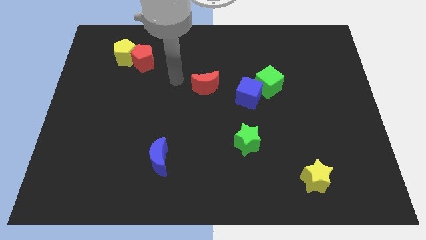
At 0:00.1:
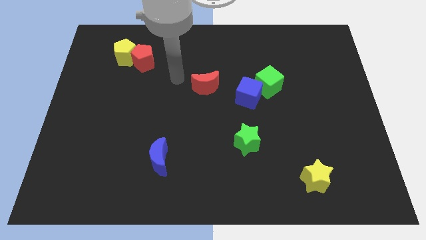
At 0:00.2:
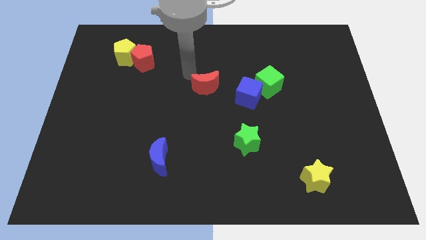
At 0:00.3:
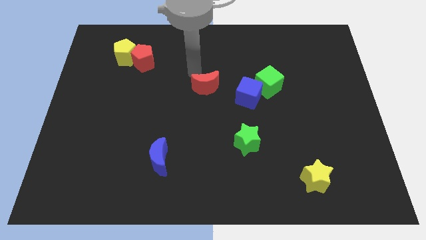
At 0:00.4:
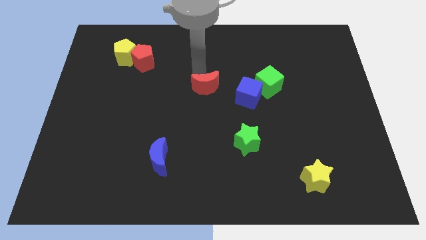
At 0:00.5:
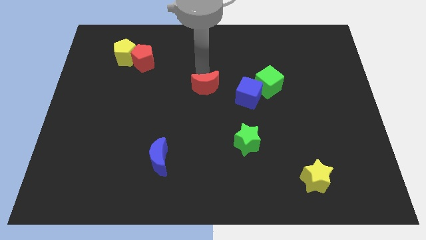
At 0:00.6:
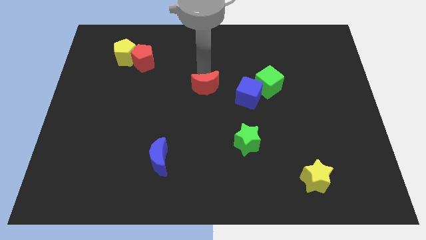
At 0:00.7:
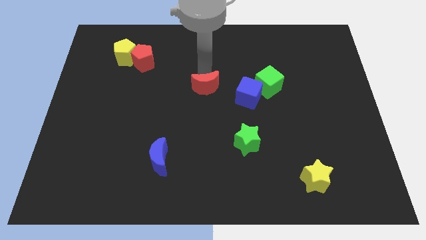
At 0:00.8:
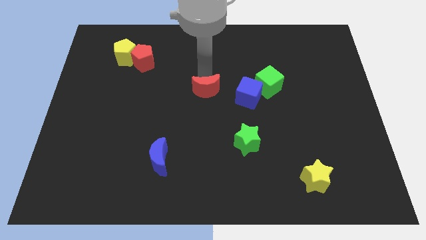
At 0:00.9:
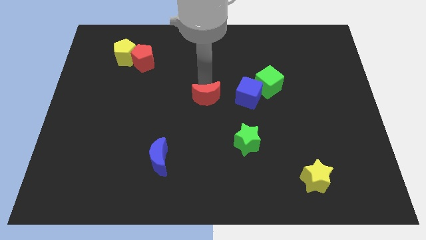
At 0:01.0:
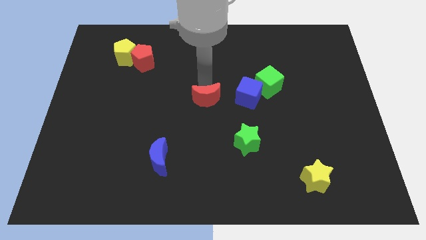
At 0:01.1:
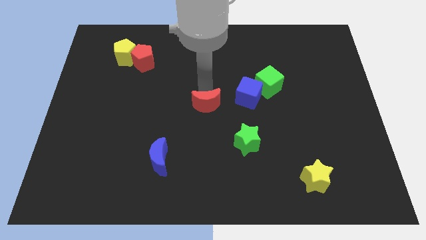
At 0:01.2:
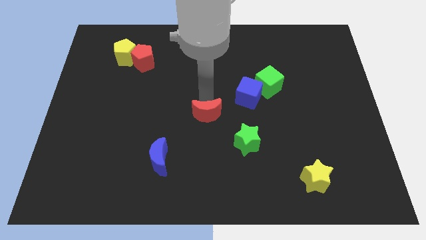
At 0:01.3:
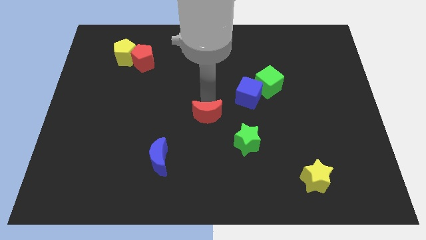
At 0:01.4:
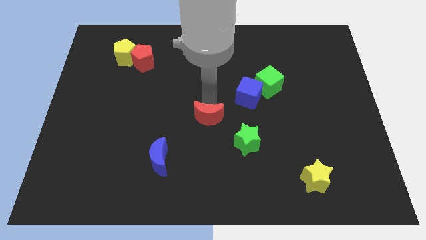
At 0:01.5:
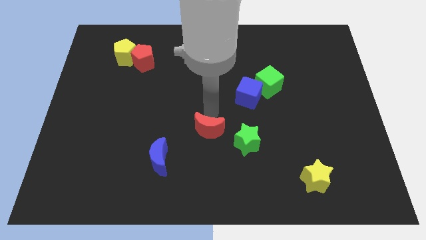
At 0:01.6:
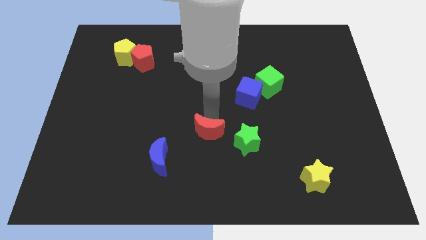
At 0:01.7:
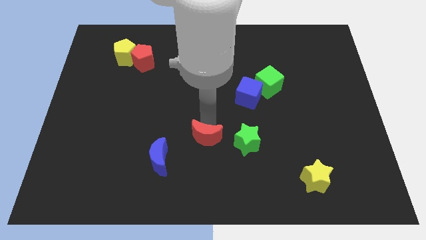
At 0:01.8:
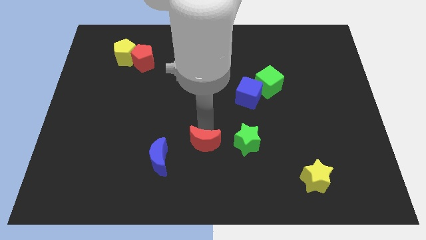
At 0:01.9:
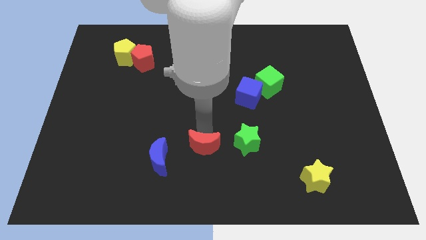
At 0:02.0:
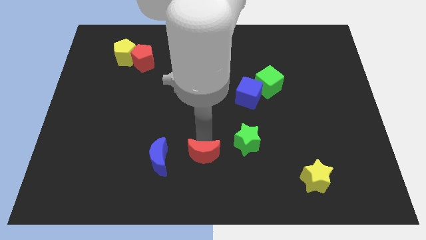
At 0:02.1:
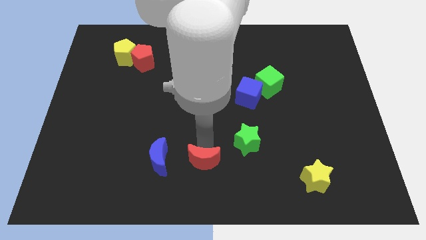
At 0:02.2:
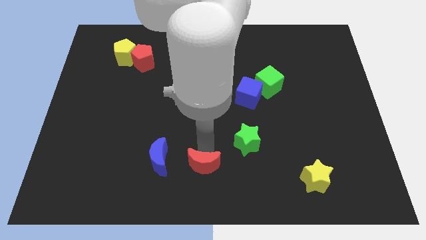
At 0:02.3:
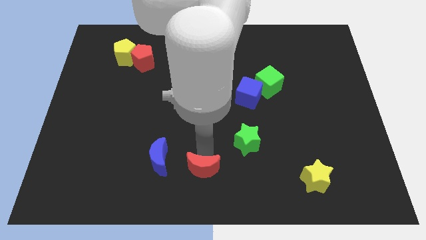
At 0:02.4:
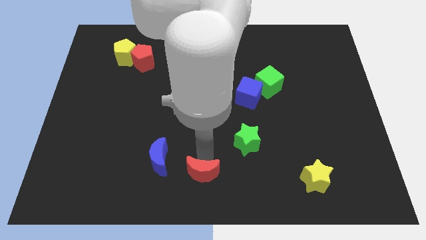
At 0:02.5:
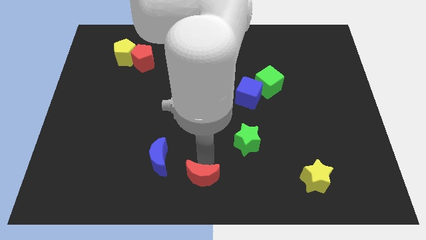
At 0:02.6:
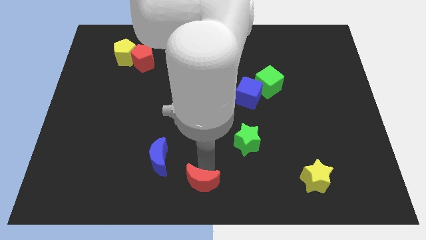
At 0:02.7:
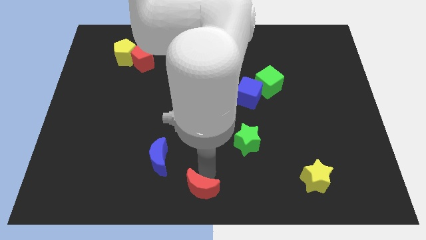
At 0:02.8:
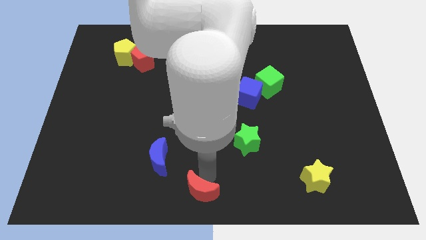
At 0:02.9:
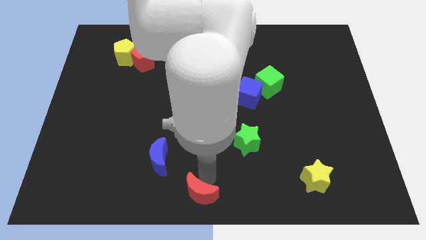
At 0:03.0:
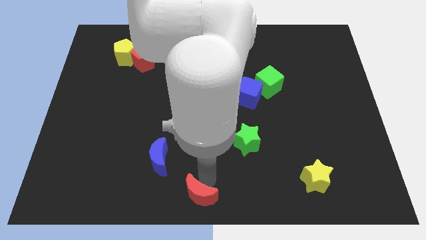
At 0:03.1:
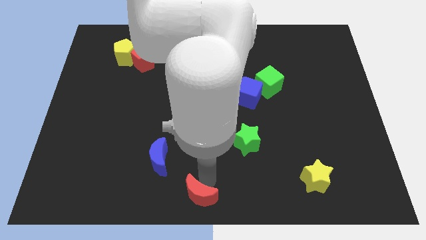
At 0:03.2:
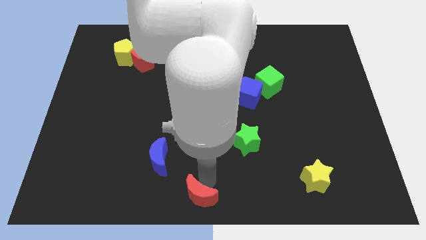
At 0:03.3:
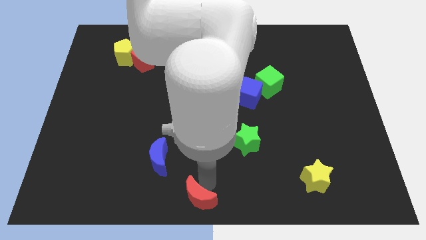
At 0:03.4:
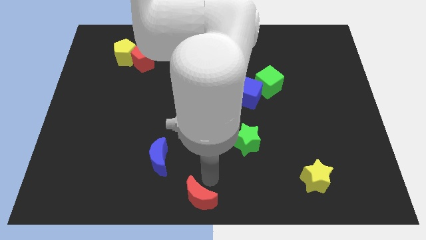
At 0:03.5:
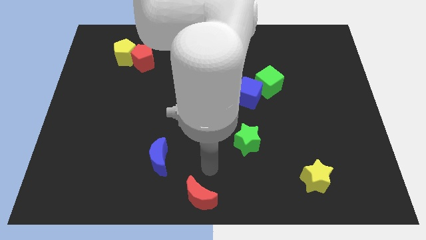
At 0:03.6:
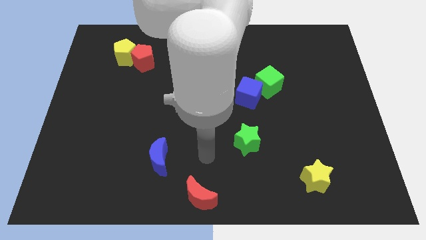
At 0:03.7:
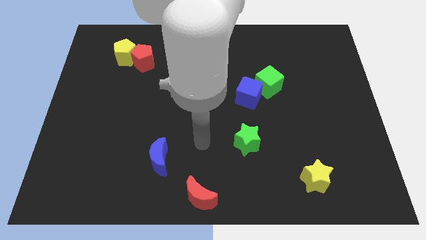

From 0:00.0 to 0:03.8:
slide the red moon at the bottom center of the board

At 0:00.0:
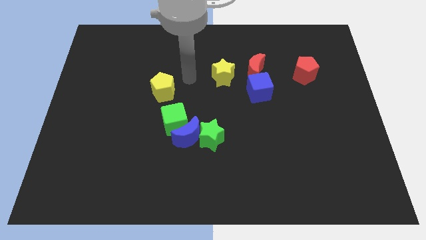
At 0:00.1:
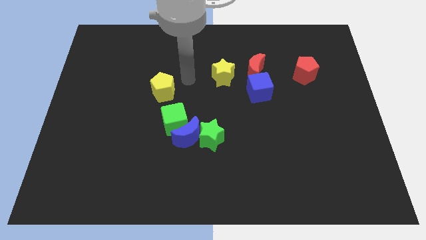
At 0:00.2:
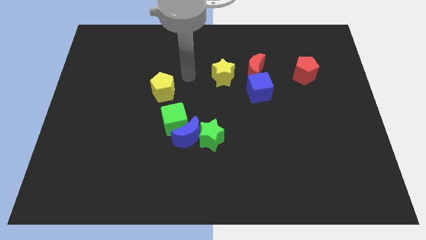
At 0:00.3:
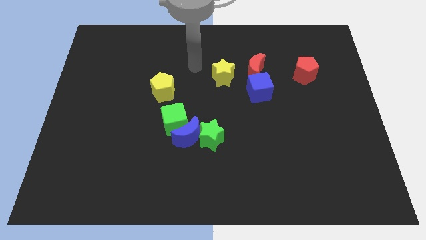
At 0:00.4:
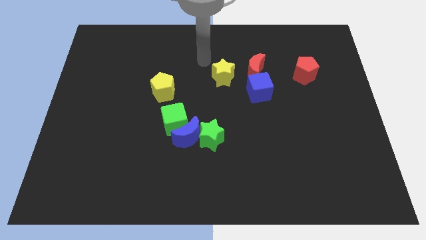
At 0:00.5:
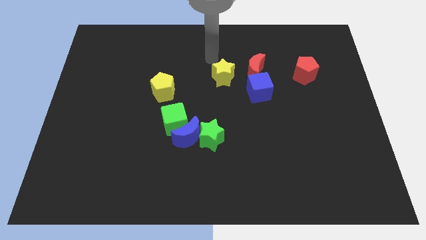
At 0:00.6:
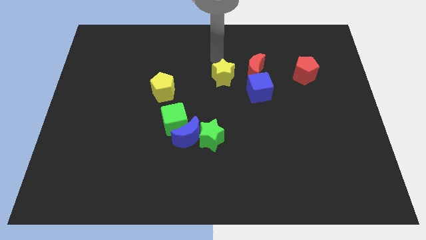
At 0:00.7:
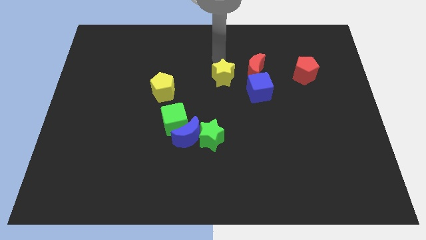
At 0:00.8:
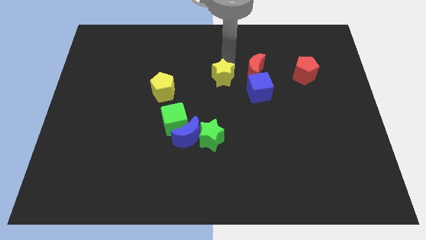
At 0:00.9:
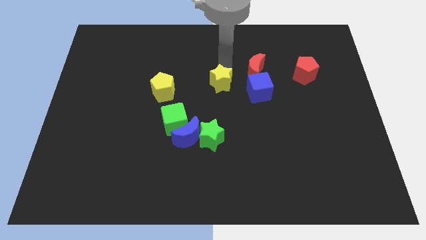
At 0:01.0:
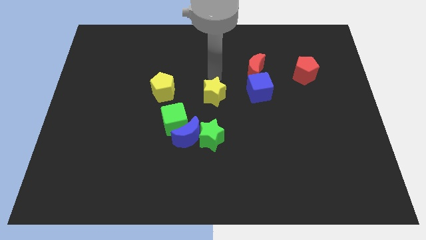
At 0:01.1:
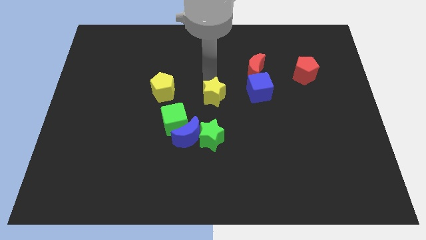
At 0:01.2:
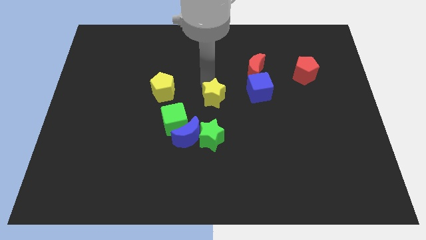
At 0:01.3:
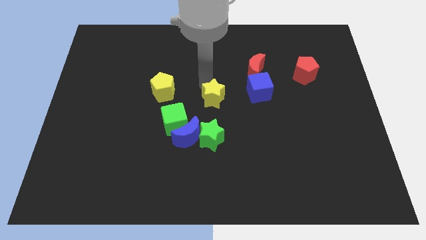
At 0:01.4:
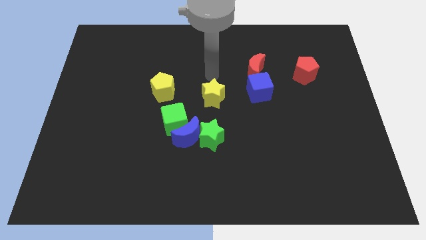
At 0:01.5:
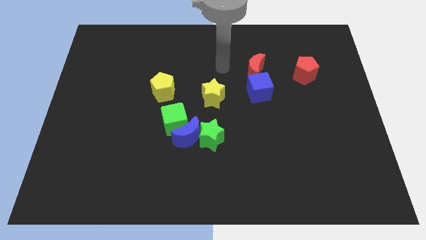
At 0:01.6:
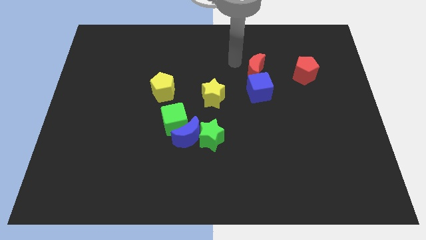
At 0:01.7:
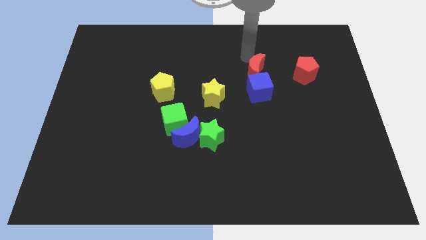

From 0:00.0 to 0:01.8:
push the yellow star above green star

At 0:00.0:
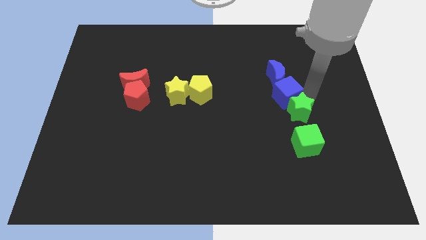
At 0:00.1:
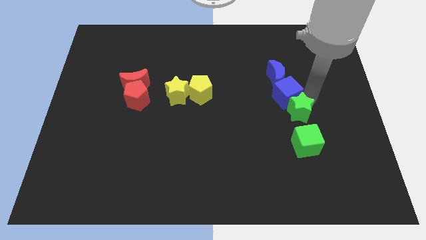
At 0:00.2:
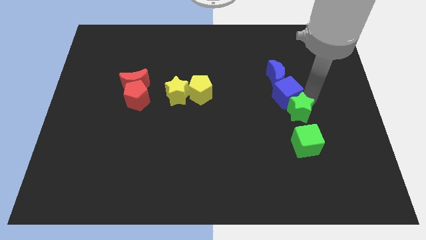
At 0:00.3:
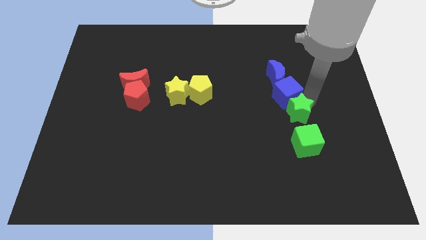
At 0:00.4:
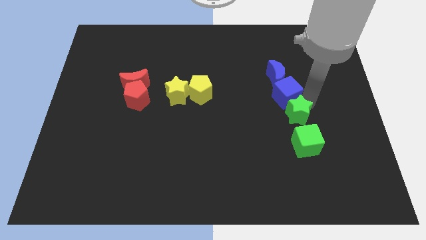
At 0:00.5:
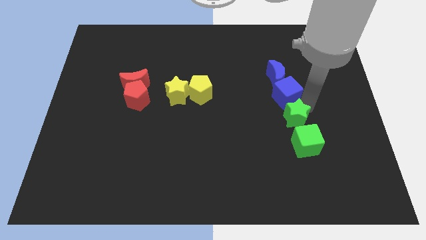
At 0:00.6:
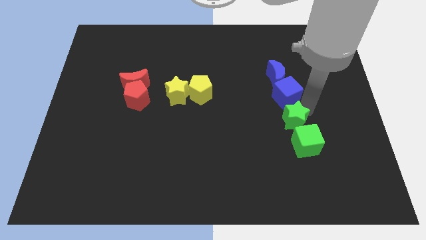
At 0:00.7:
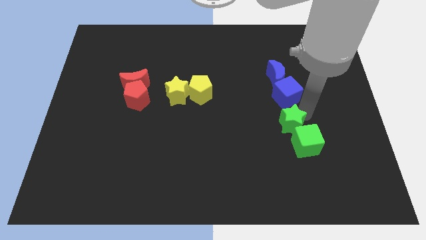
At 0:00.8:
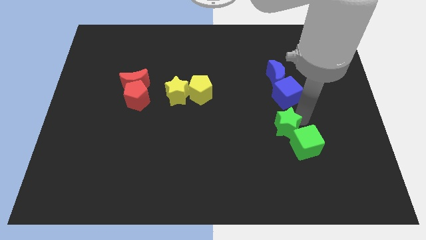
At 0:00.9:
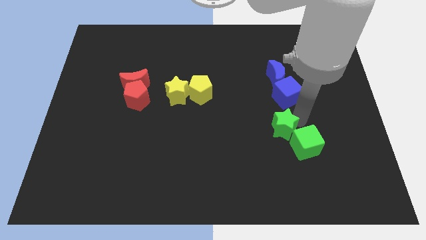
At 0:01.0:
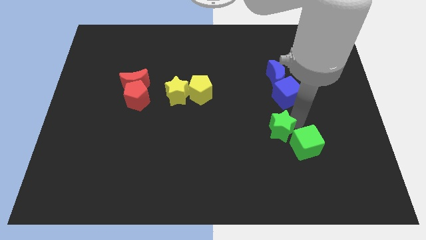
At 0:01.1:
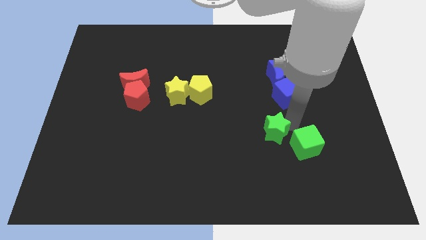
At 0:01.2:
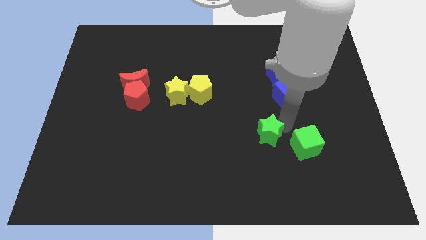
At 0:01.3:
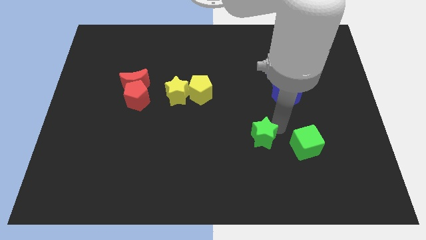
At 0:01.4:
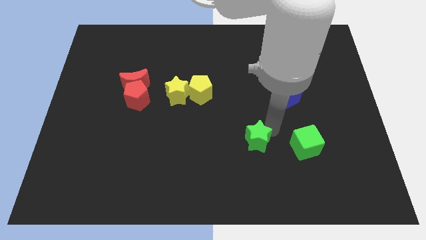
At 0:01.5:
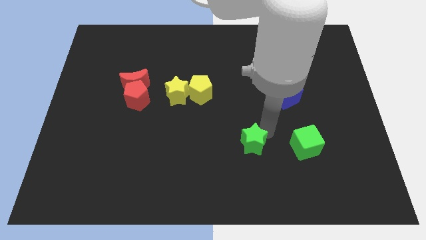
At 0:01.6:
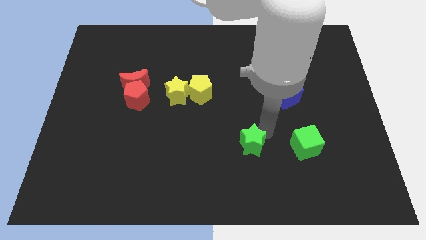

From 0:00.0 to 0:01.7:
move green star to the left of green cube

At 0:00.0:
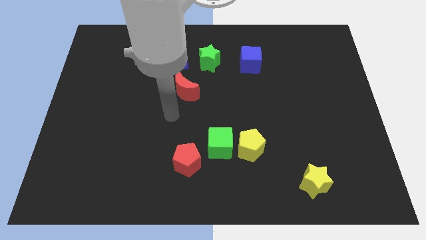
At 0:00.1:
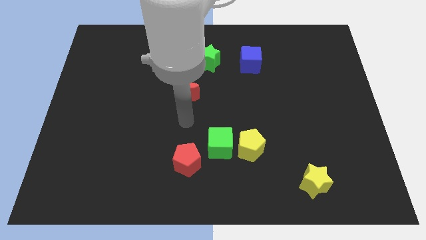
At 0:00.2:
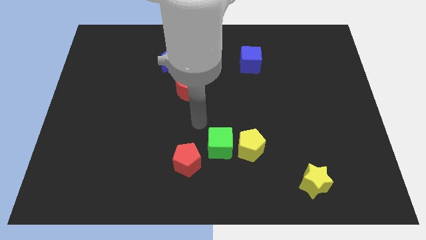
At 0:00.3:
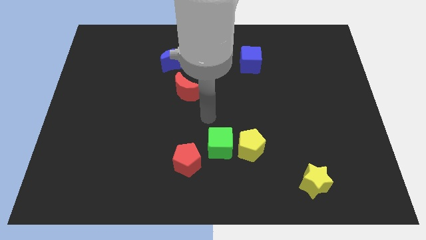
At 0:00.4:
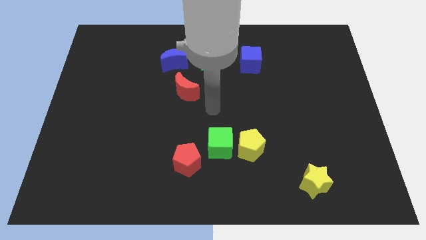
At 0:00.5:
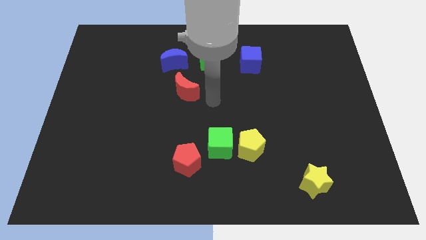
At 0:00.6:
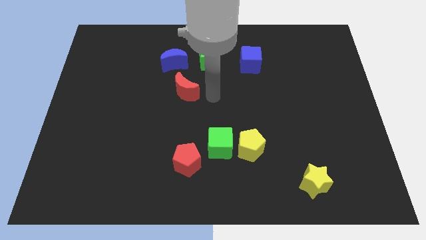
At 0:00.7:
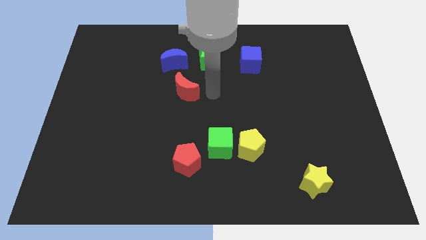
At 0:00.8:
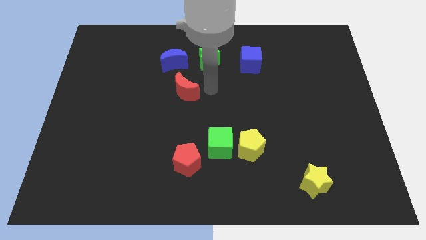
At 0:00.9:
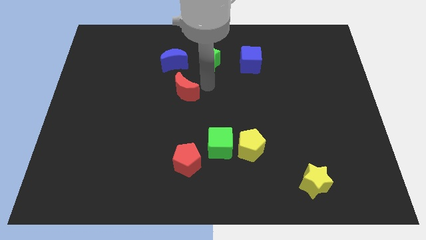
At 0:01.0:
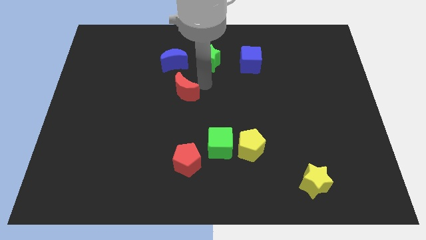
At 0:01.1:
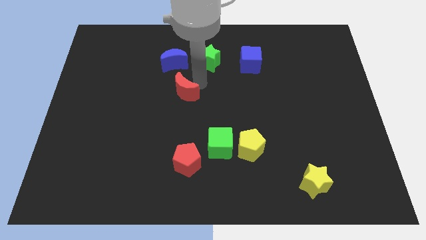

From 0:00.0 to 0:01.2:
slightly touch down the red moon

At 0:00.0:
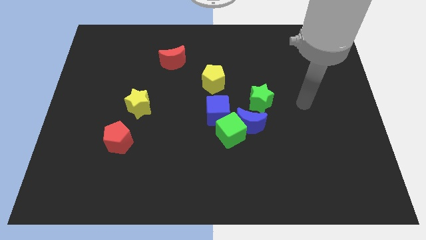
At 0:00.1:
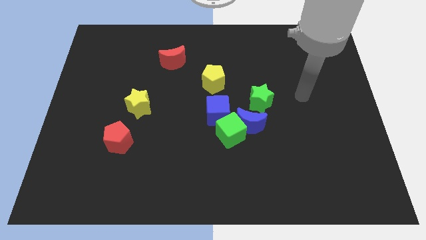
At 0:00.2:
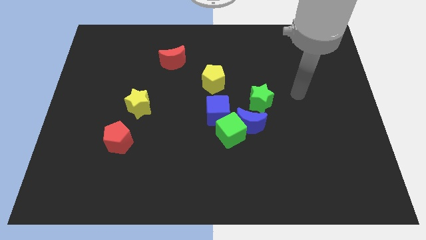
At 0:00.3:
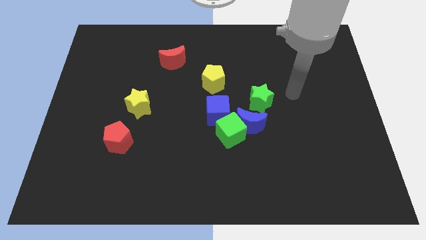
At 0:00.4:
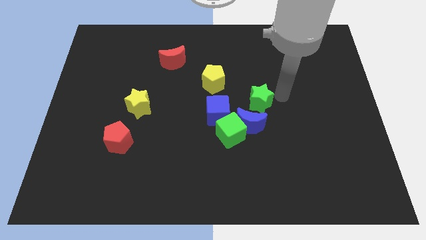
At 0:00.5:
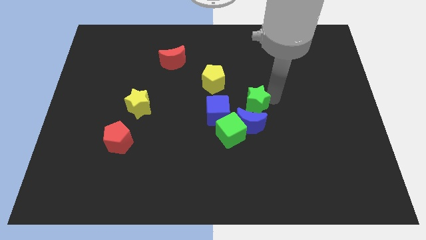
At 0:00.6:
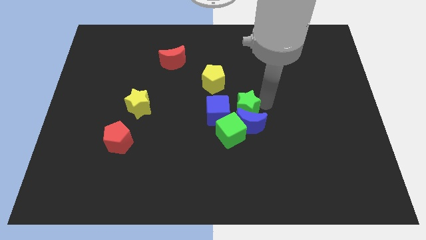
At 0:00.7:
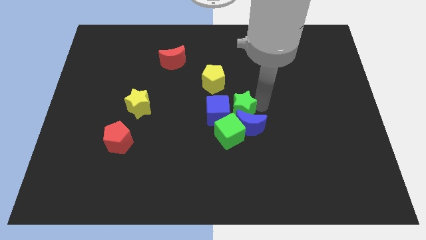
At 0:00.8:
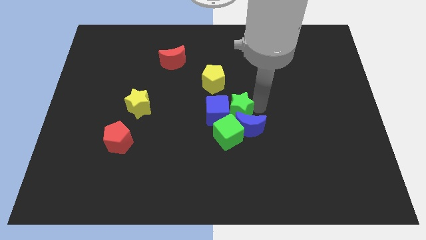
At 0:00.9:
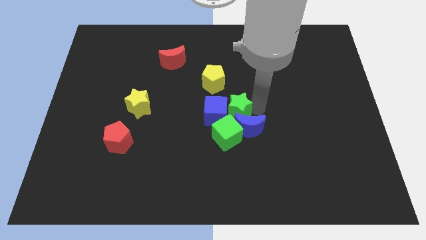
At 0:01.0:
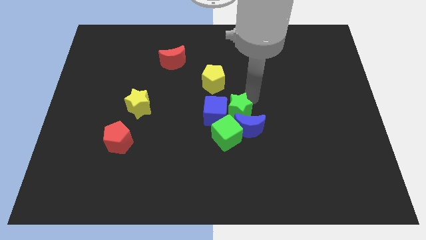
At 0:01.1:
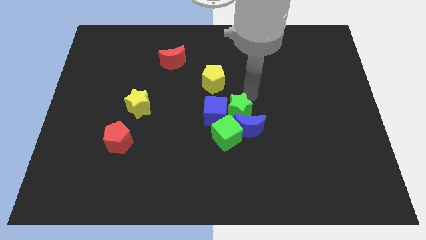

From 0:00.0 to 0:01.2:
push the green star in to the group of blocks
